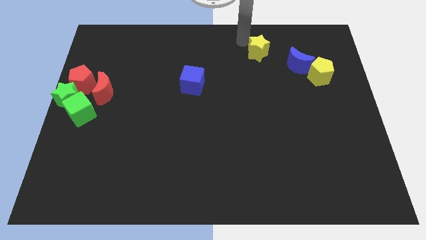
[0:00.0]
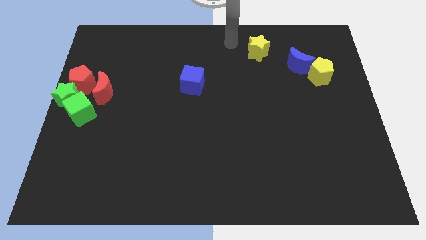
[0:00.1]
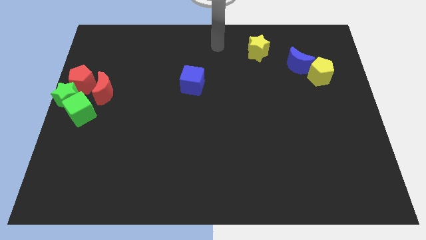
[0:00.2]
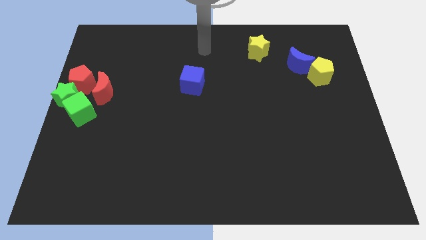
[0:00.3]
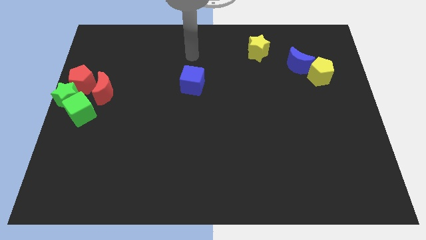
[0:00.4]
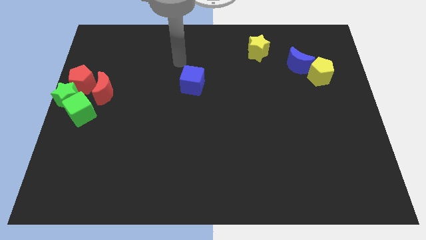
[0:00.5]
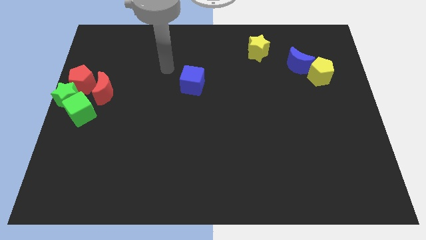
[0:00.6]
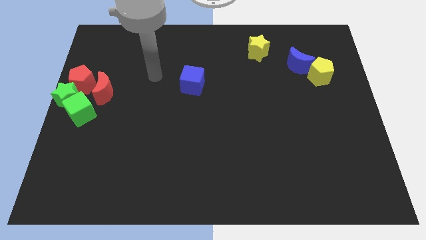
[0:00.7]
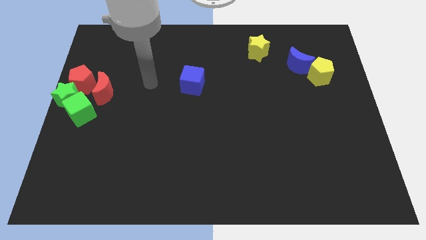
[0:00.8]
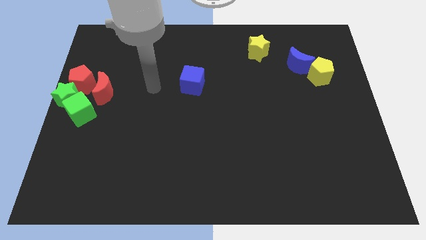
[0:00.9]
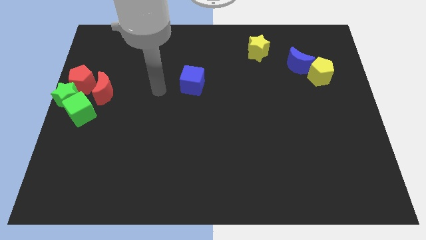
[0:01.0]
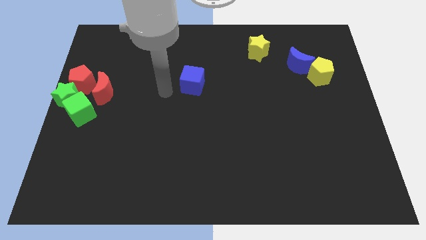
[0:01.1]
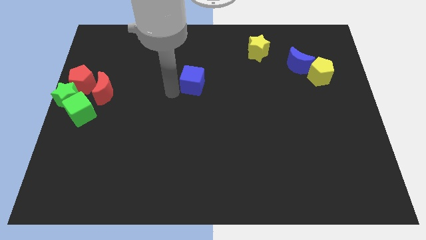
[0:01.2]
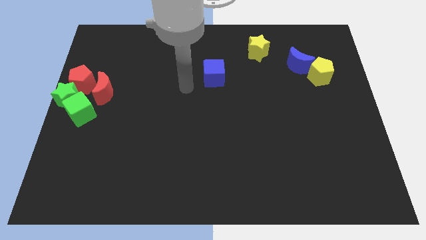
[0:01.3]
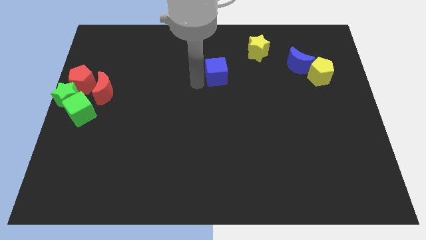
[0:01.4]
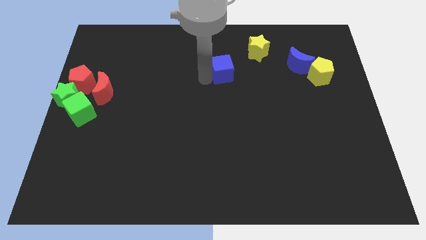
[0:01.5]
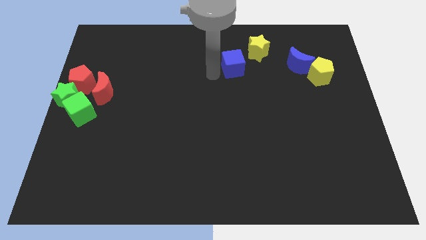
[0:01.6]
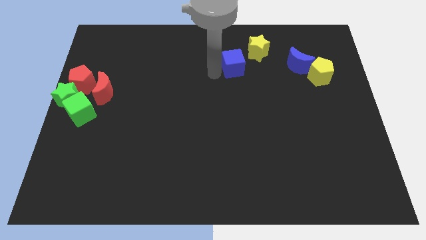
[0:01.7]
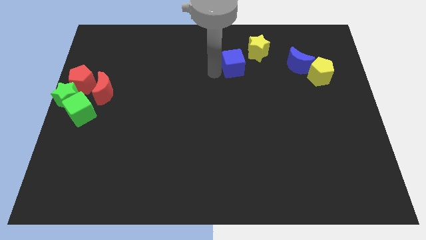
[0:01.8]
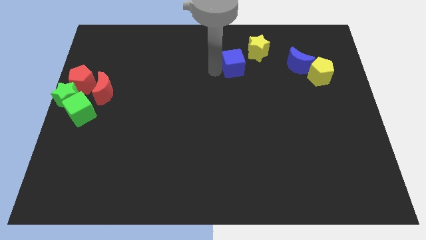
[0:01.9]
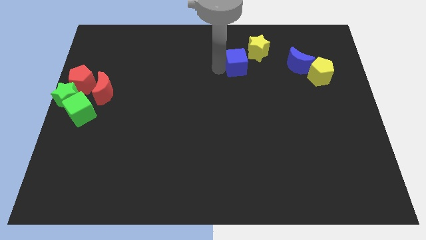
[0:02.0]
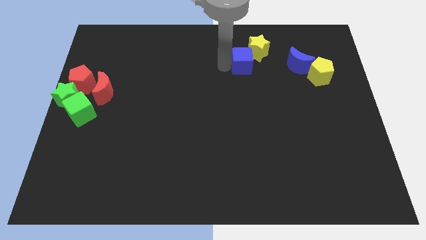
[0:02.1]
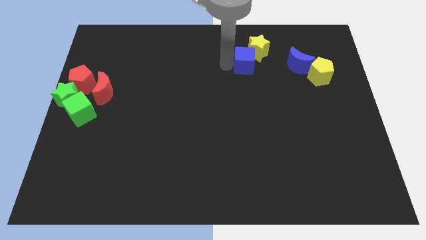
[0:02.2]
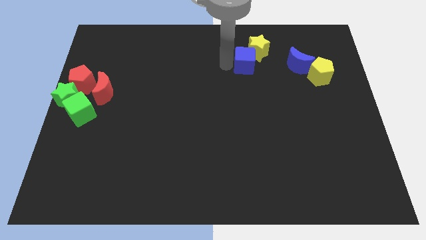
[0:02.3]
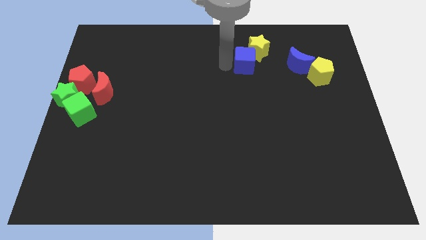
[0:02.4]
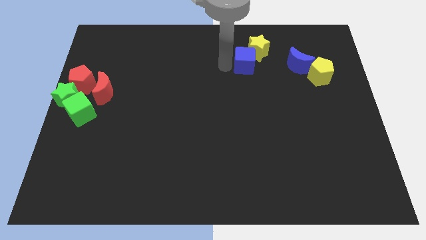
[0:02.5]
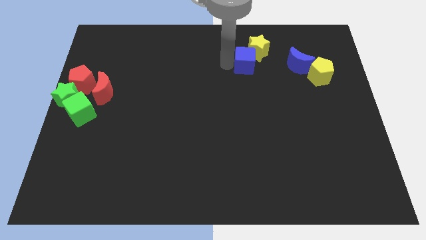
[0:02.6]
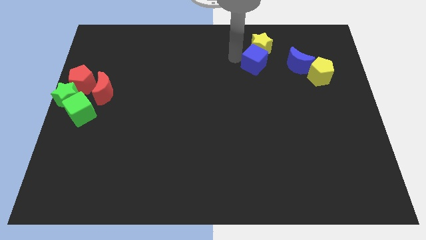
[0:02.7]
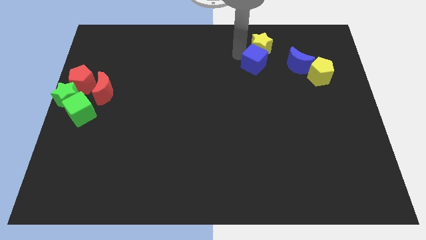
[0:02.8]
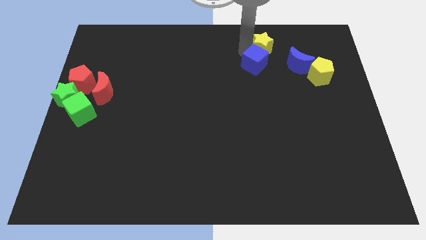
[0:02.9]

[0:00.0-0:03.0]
push blue cube into the yellow star

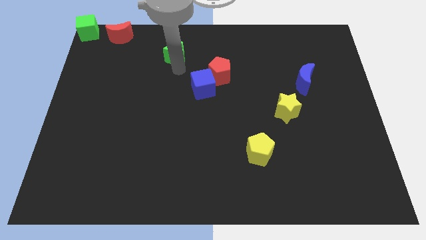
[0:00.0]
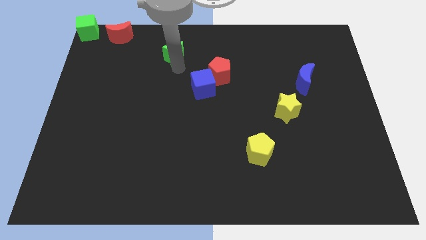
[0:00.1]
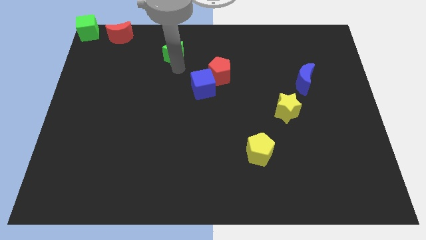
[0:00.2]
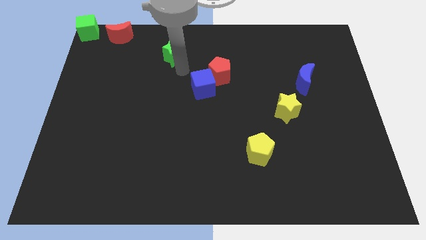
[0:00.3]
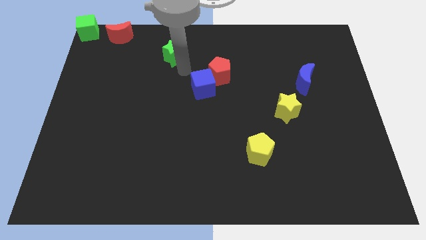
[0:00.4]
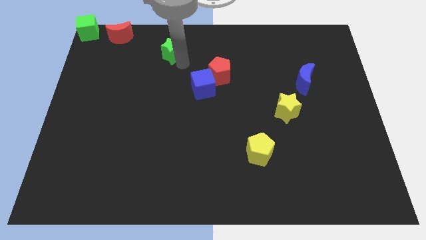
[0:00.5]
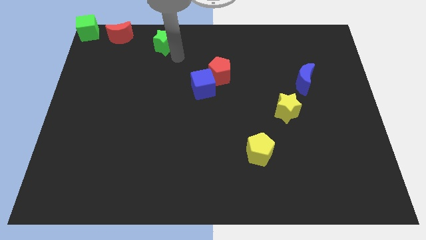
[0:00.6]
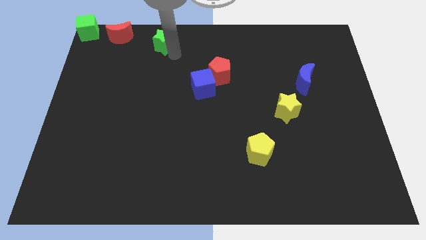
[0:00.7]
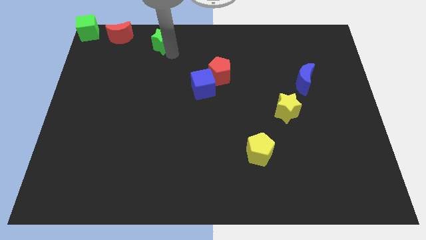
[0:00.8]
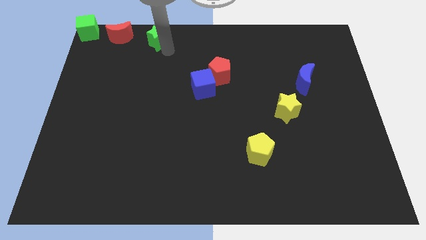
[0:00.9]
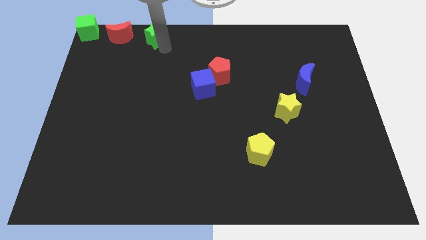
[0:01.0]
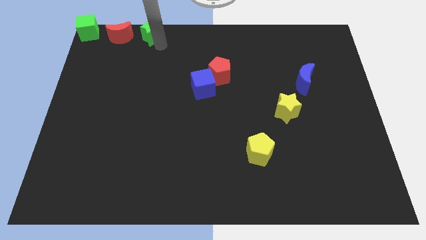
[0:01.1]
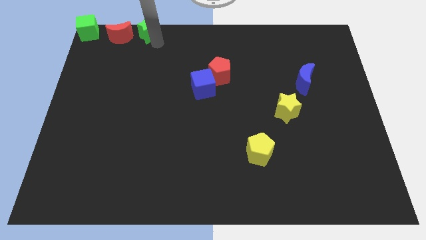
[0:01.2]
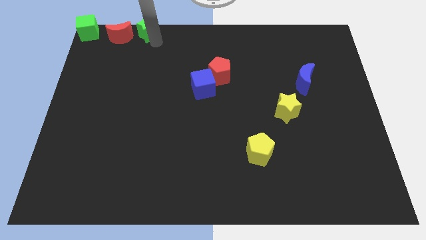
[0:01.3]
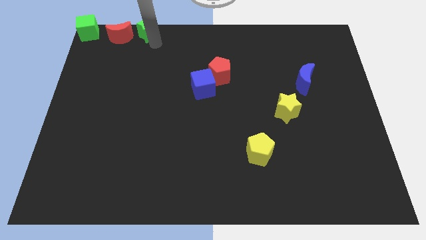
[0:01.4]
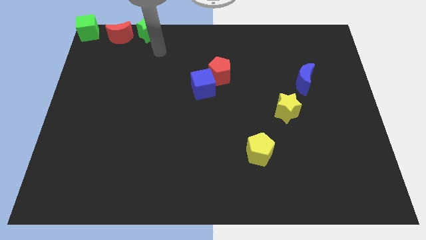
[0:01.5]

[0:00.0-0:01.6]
push the green star to the right of the red moon

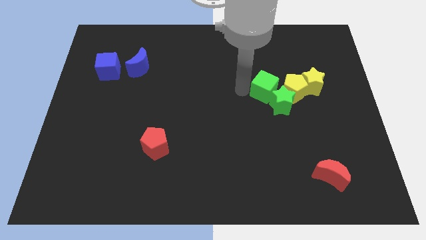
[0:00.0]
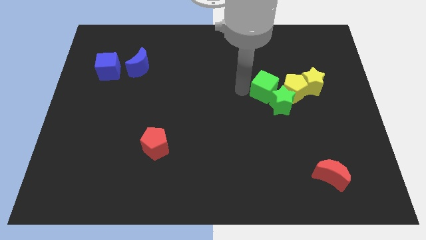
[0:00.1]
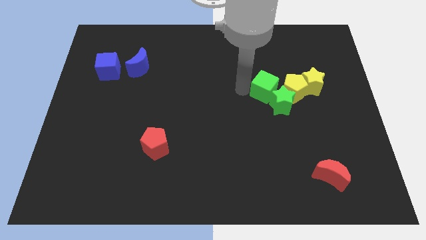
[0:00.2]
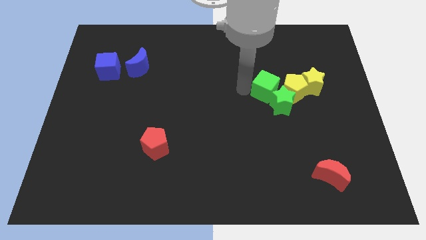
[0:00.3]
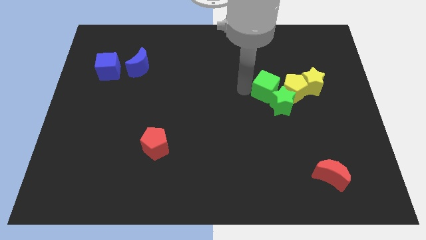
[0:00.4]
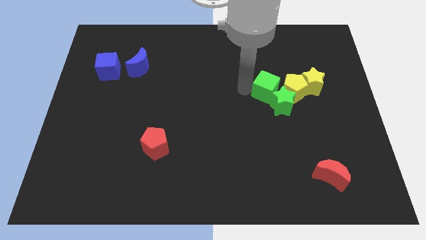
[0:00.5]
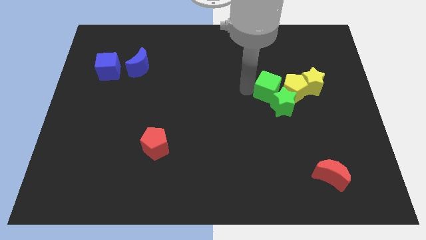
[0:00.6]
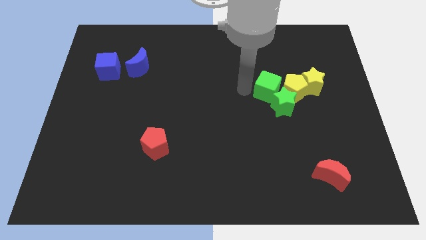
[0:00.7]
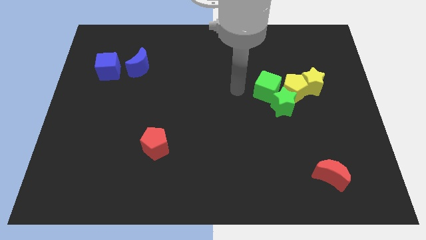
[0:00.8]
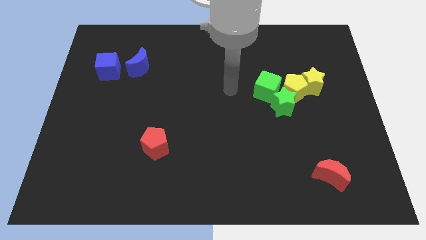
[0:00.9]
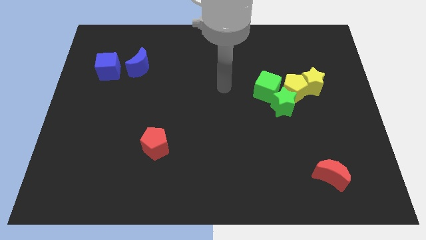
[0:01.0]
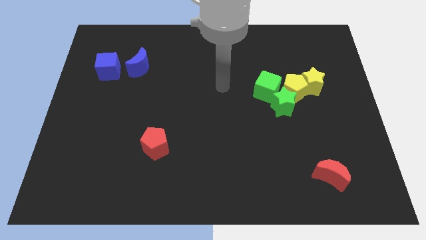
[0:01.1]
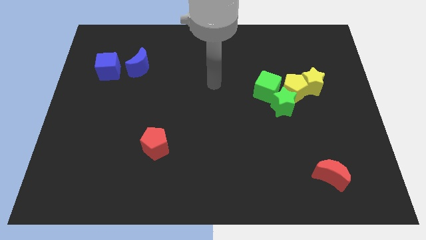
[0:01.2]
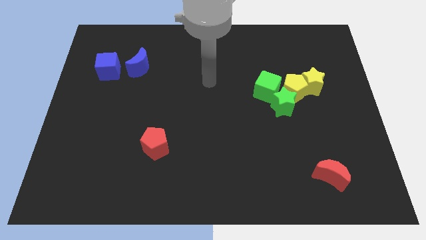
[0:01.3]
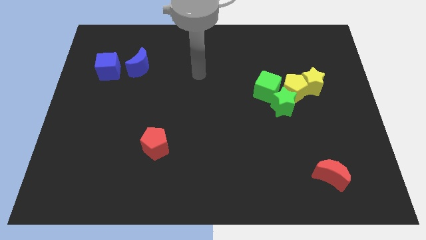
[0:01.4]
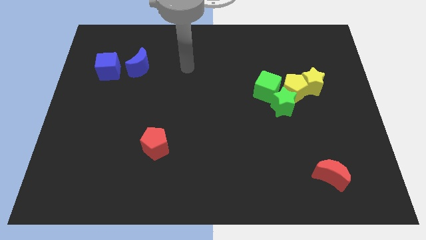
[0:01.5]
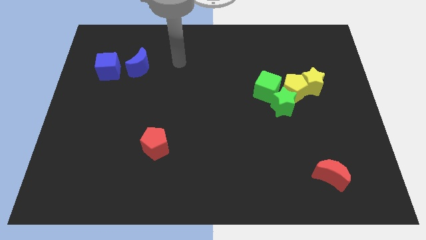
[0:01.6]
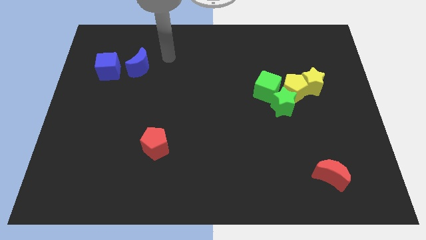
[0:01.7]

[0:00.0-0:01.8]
adjust the green cube into the green star

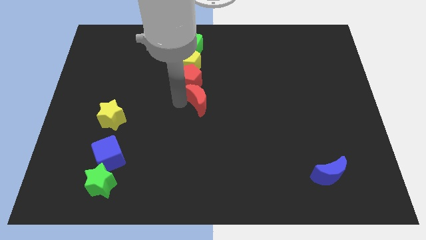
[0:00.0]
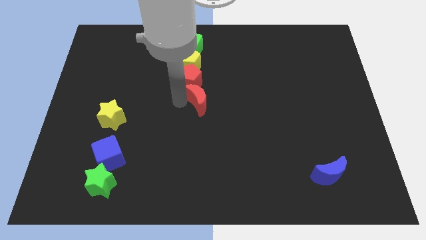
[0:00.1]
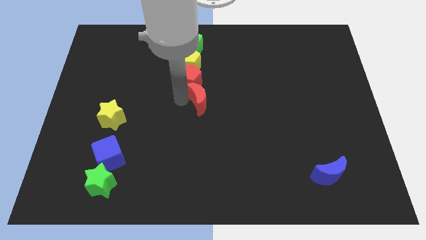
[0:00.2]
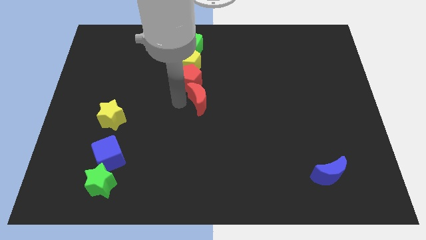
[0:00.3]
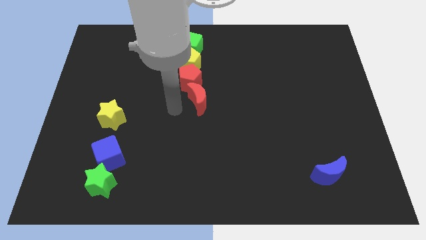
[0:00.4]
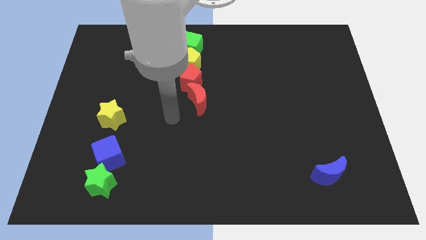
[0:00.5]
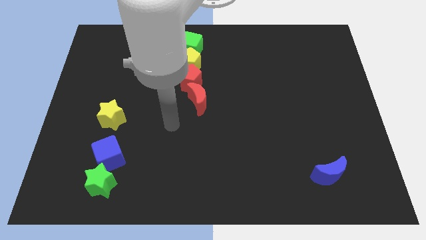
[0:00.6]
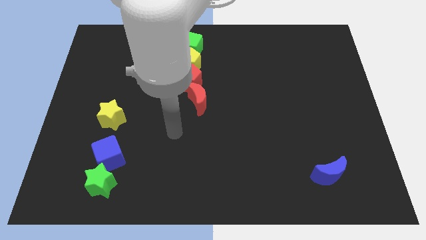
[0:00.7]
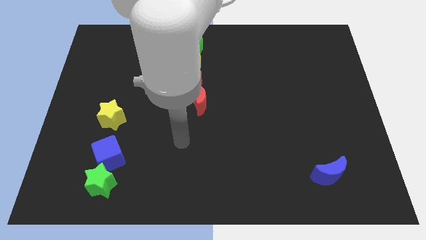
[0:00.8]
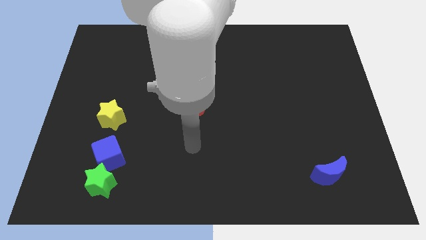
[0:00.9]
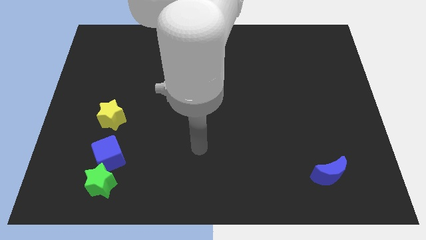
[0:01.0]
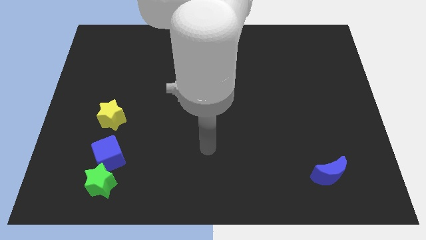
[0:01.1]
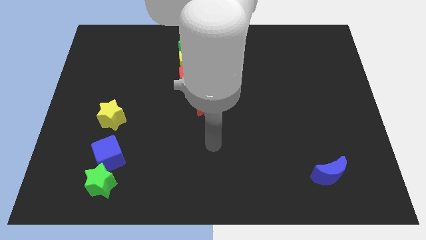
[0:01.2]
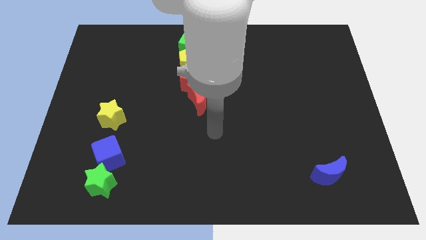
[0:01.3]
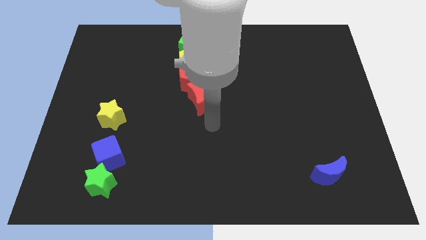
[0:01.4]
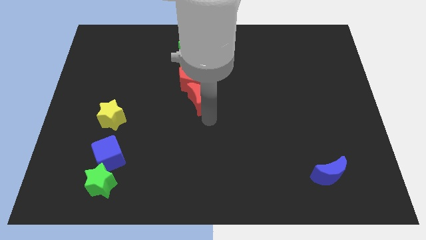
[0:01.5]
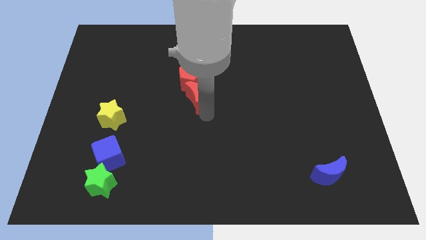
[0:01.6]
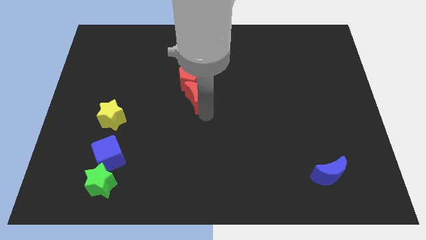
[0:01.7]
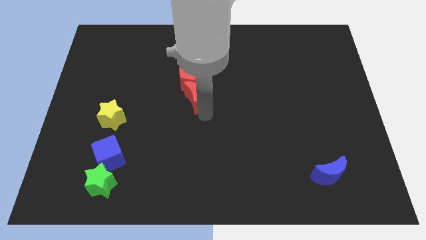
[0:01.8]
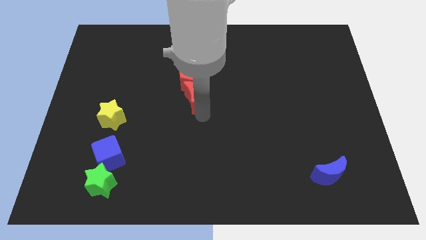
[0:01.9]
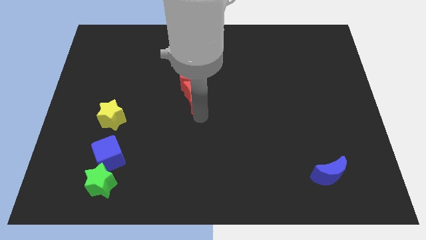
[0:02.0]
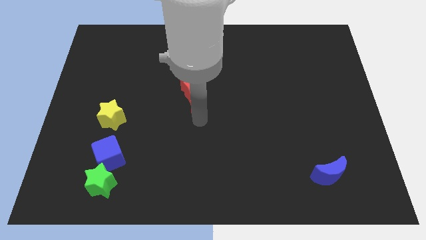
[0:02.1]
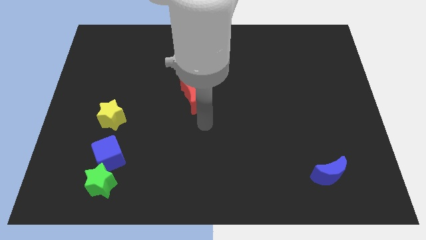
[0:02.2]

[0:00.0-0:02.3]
move red moon slightly towards the red pentagon

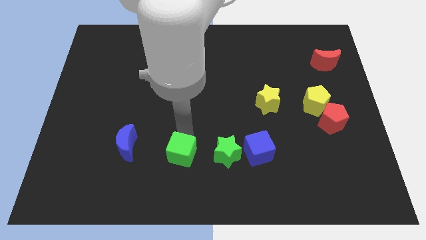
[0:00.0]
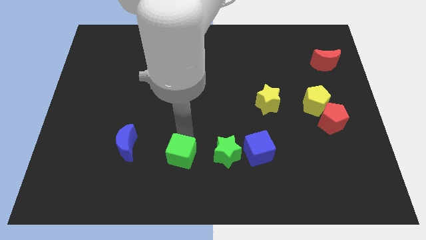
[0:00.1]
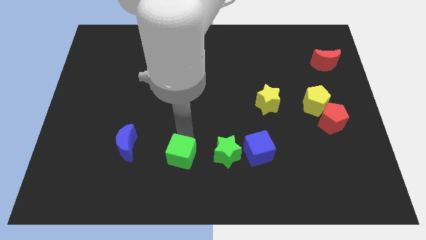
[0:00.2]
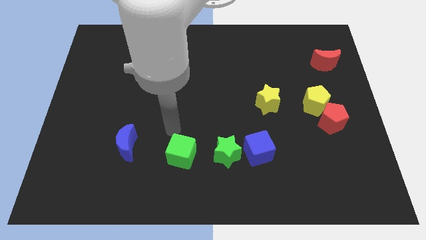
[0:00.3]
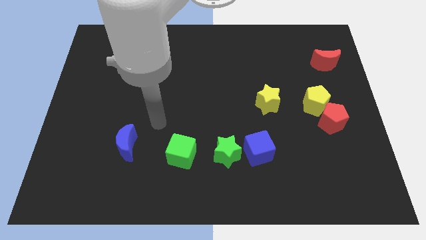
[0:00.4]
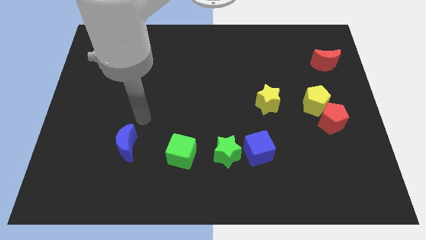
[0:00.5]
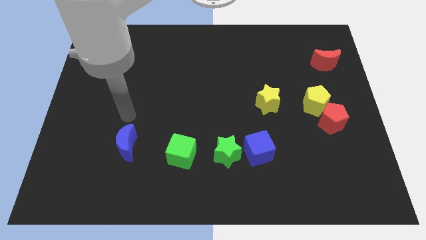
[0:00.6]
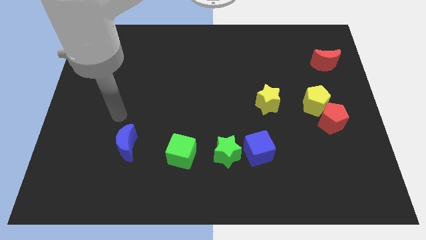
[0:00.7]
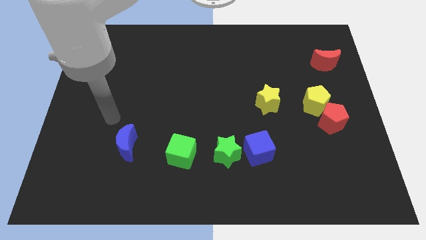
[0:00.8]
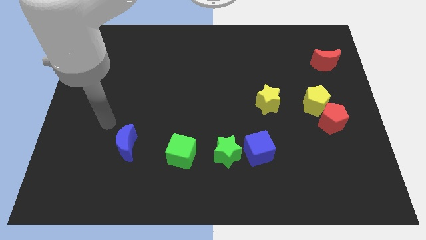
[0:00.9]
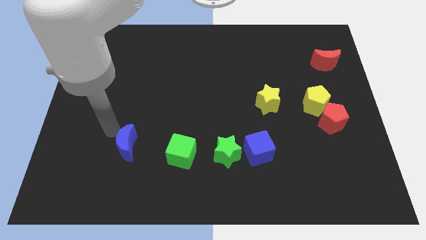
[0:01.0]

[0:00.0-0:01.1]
move the arm away from the green cube
